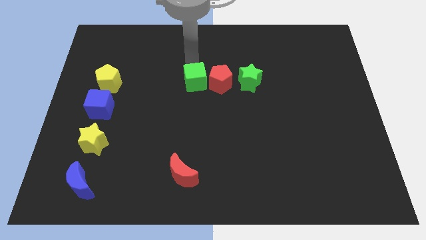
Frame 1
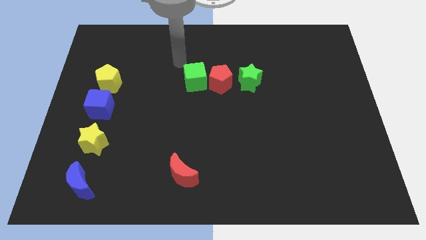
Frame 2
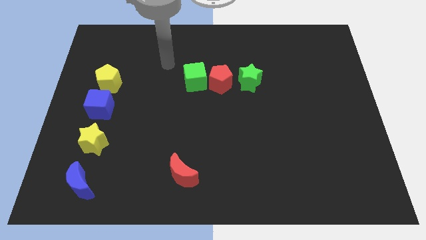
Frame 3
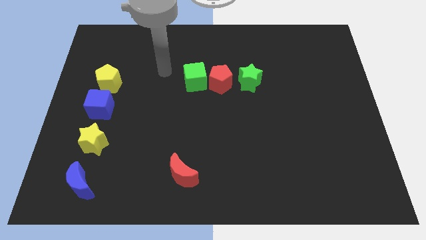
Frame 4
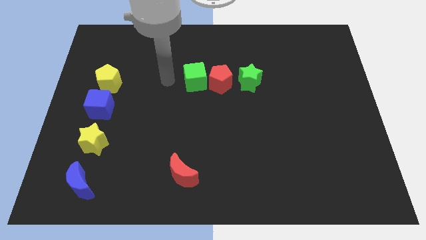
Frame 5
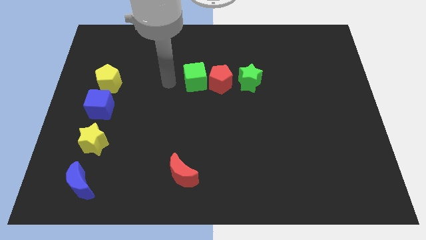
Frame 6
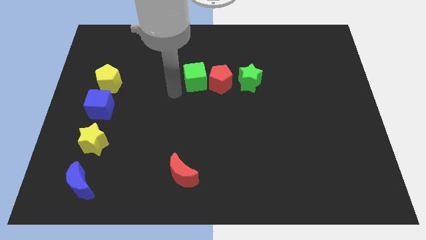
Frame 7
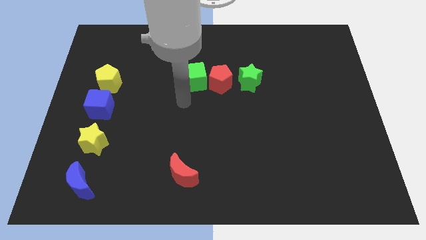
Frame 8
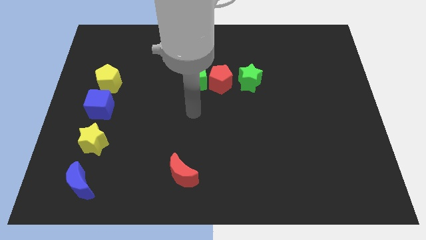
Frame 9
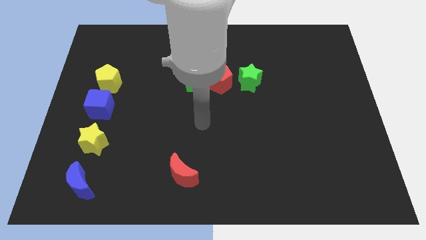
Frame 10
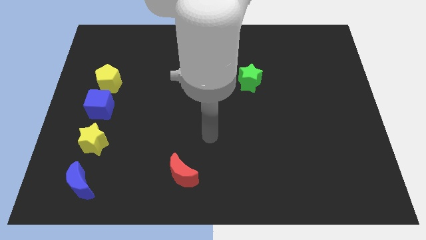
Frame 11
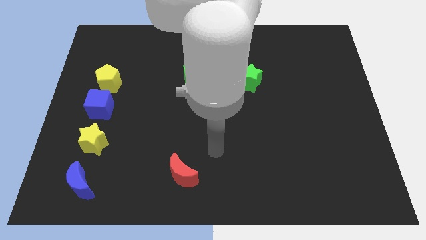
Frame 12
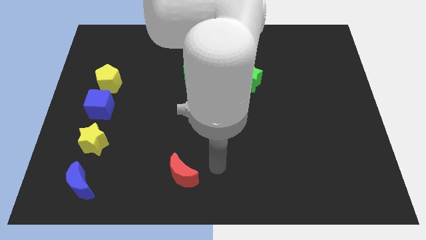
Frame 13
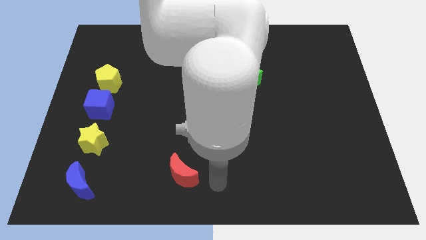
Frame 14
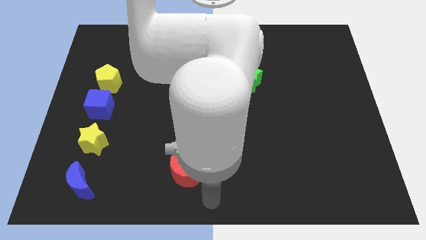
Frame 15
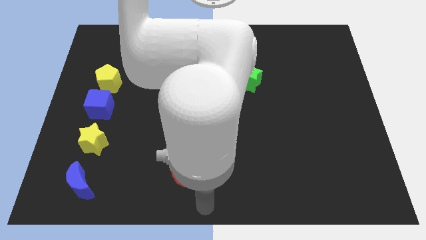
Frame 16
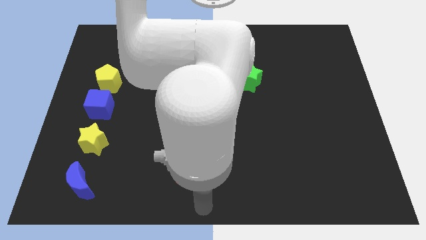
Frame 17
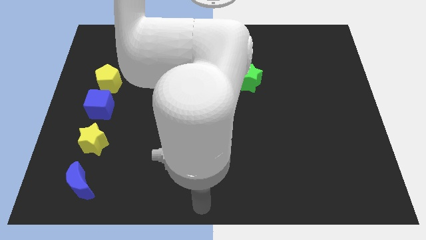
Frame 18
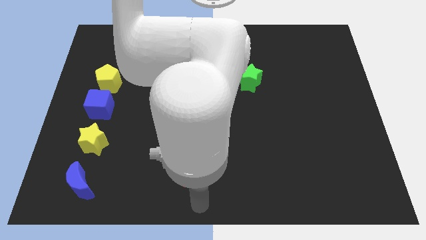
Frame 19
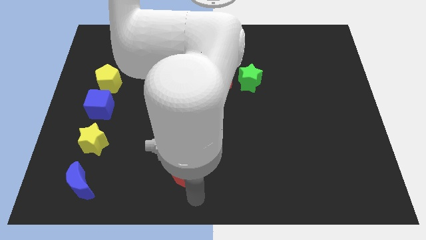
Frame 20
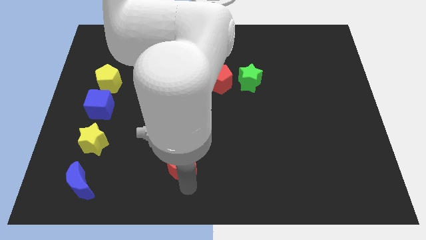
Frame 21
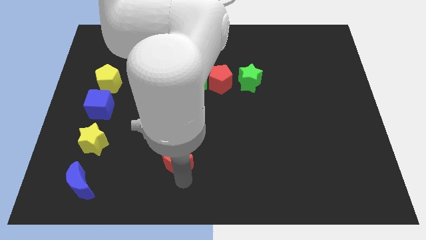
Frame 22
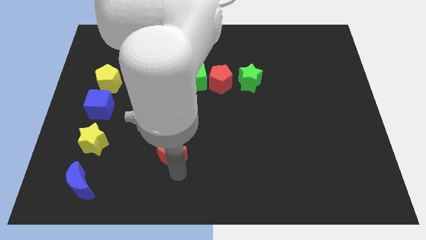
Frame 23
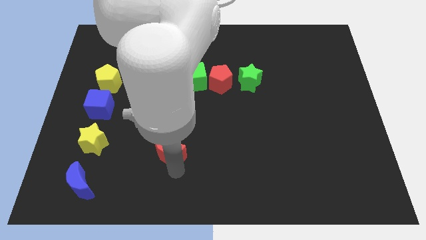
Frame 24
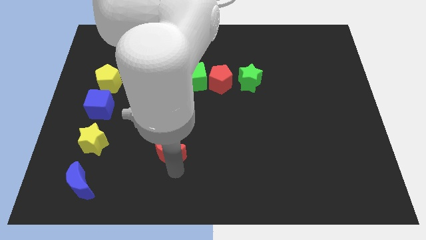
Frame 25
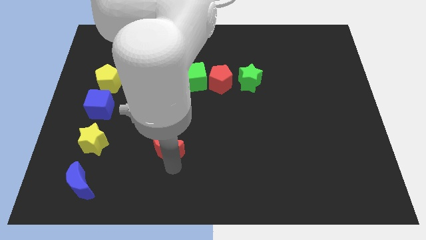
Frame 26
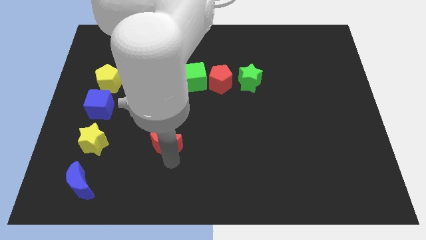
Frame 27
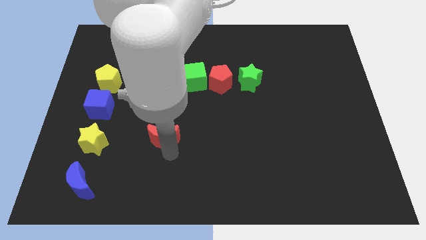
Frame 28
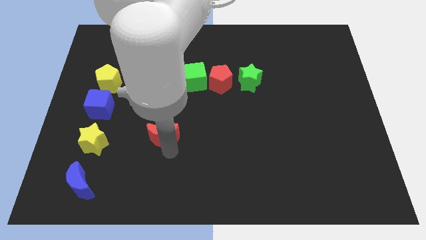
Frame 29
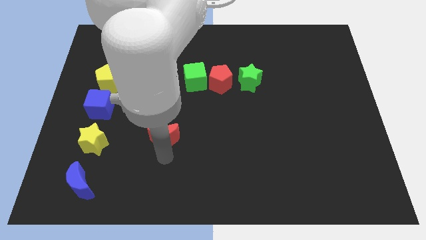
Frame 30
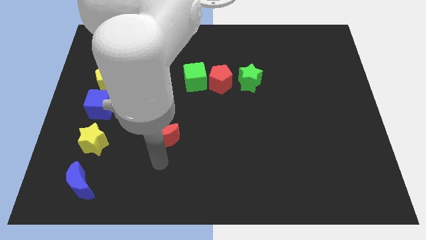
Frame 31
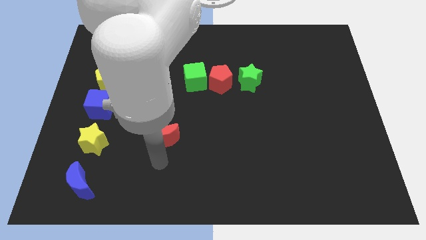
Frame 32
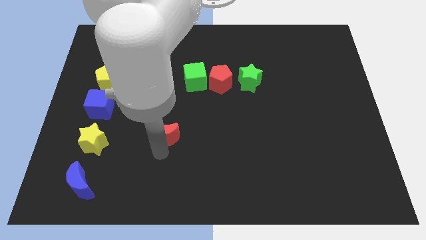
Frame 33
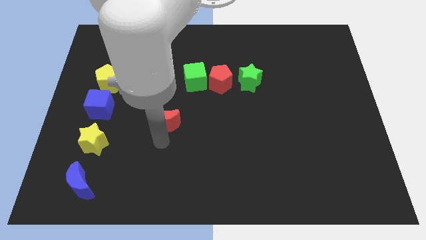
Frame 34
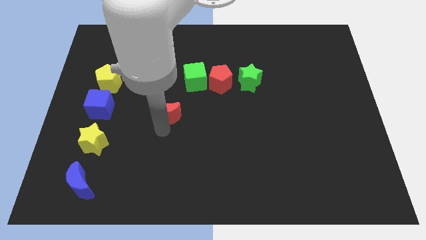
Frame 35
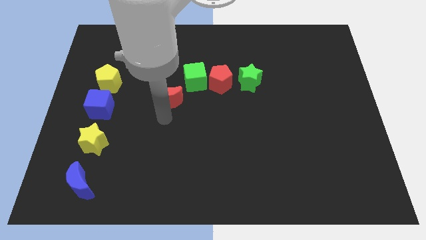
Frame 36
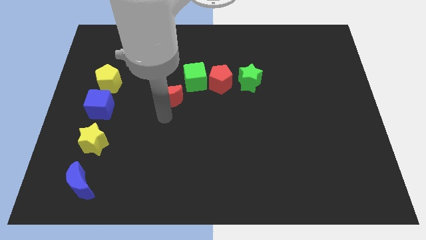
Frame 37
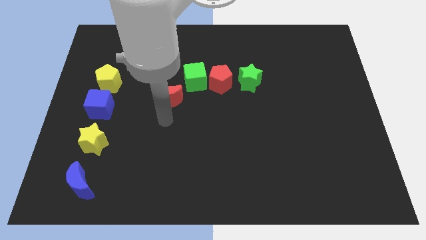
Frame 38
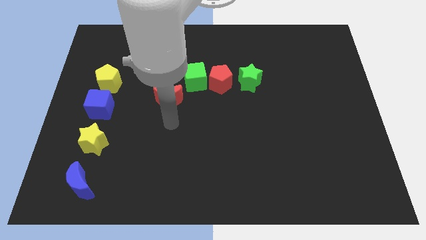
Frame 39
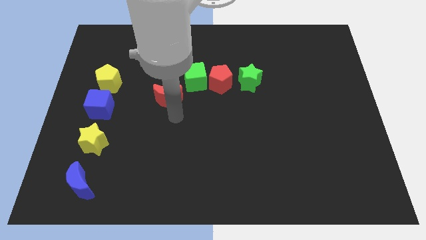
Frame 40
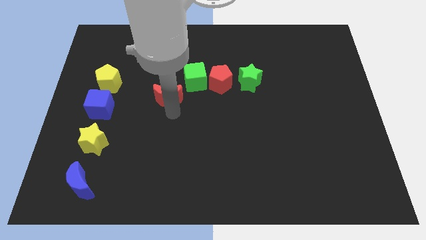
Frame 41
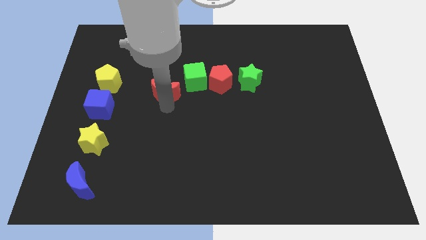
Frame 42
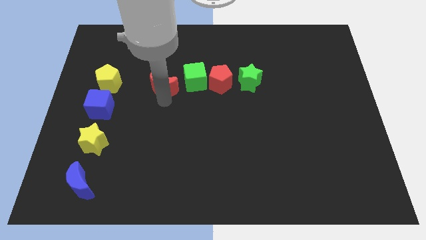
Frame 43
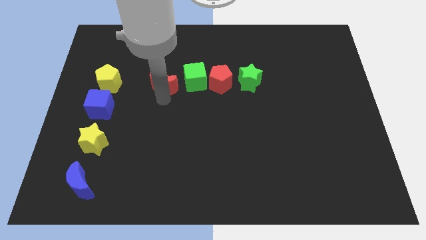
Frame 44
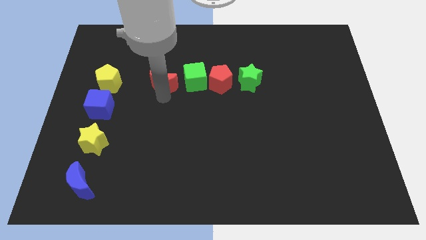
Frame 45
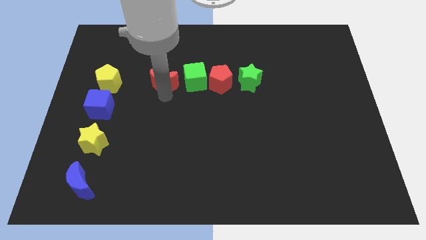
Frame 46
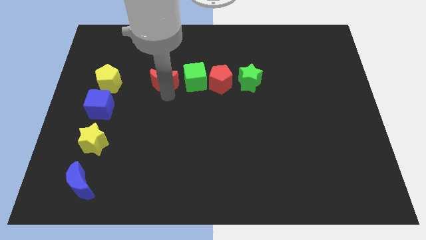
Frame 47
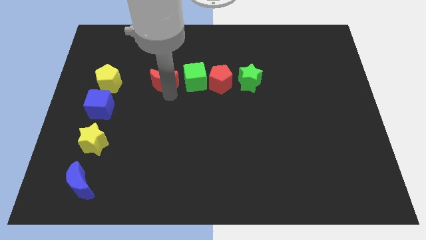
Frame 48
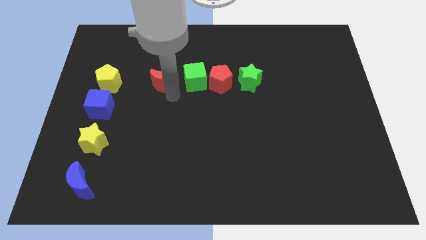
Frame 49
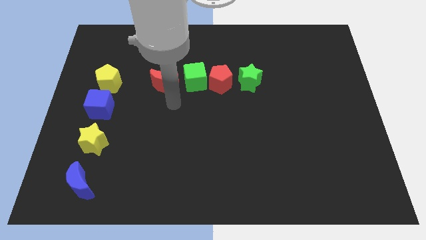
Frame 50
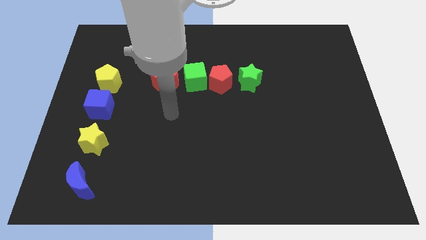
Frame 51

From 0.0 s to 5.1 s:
move the red crescent to the left side of the green cube

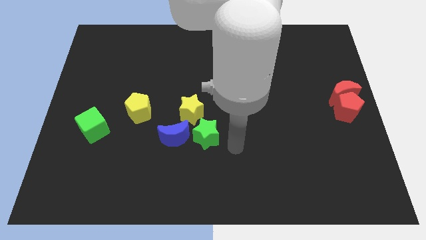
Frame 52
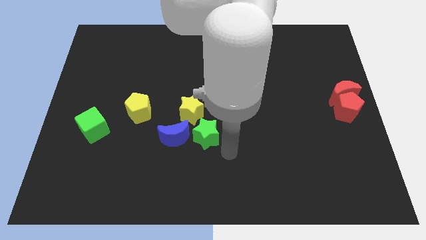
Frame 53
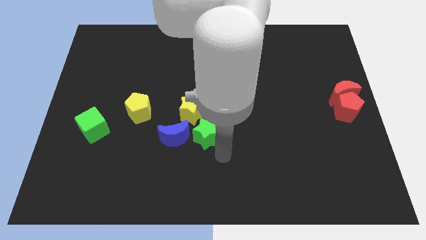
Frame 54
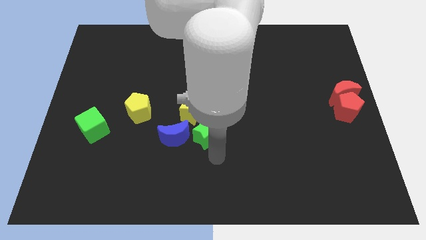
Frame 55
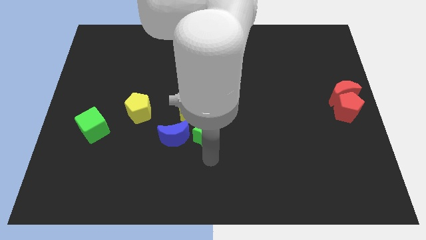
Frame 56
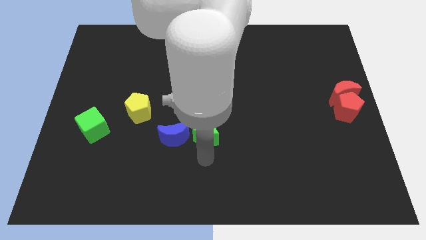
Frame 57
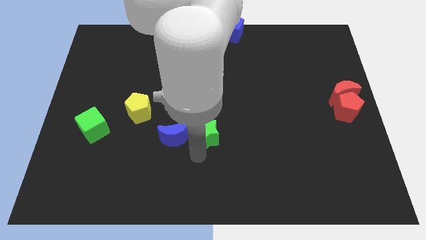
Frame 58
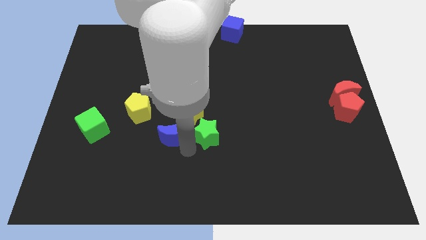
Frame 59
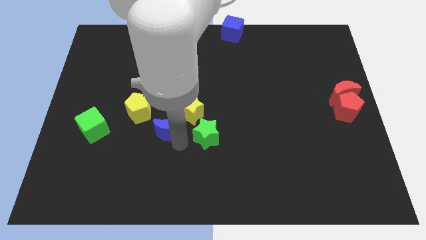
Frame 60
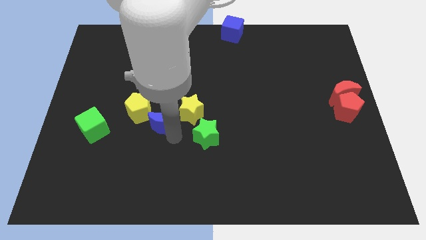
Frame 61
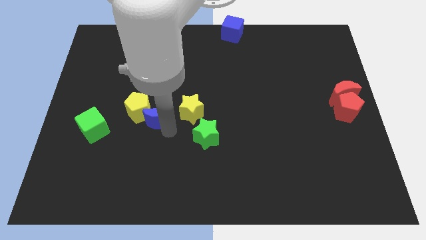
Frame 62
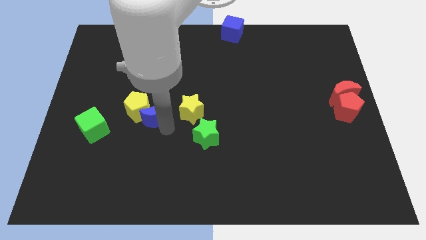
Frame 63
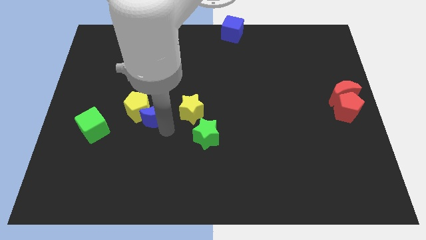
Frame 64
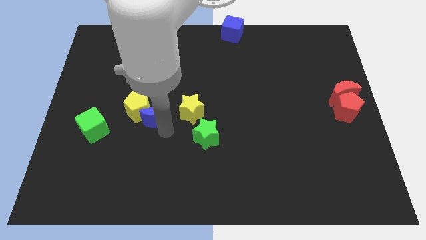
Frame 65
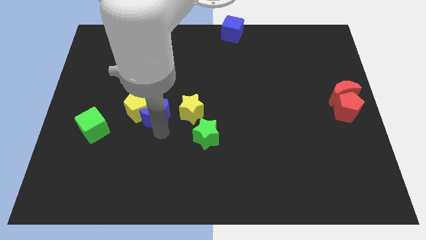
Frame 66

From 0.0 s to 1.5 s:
move blue moon into the yellow pentagon

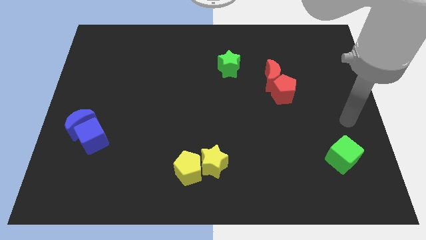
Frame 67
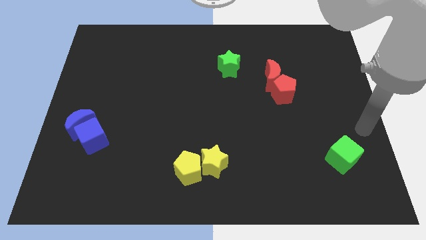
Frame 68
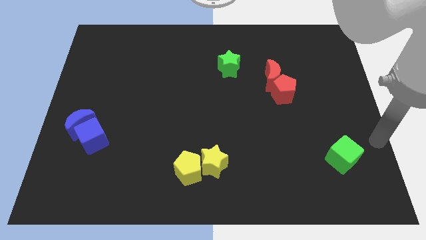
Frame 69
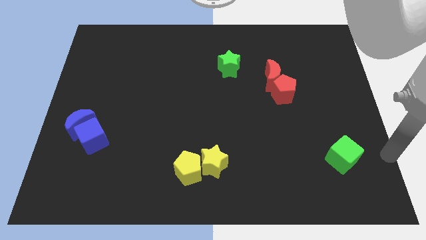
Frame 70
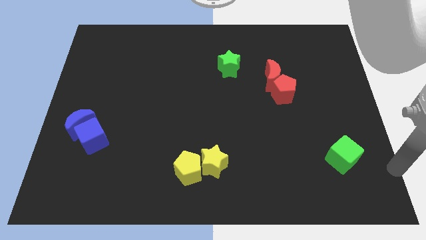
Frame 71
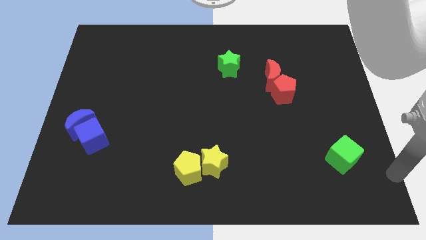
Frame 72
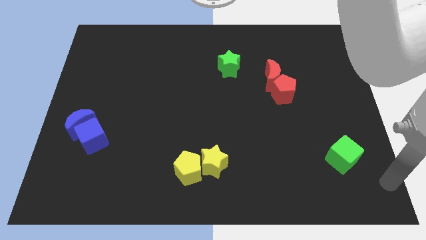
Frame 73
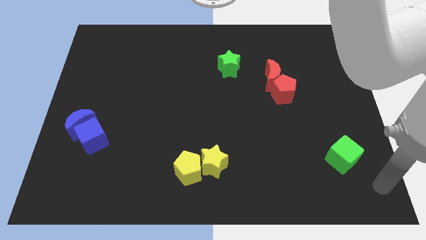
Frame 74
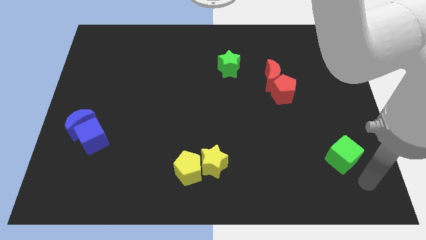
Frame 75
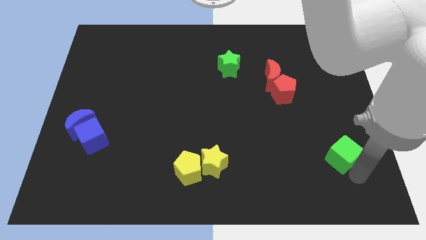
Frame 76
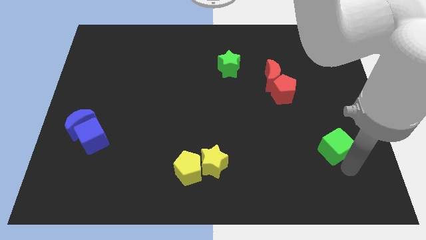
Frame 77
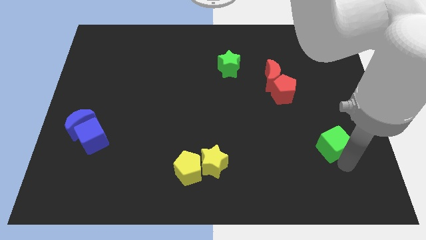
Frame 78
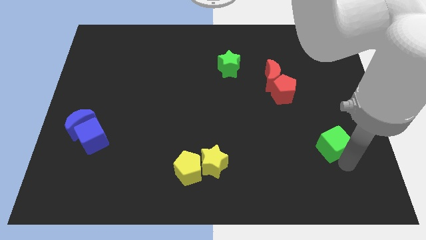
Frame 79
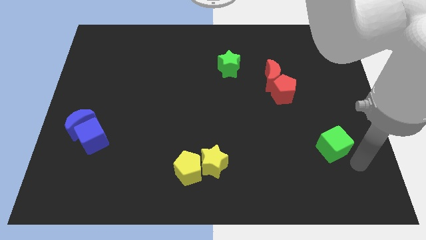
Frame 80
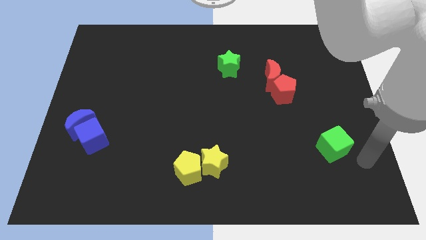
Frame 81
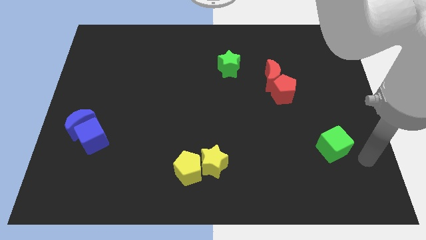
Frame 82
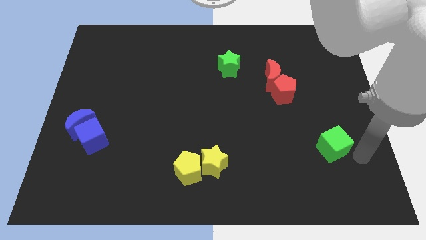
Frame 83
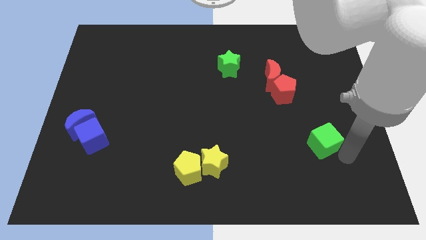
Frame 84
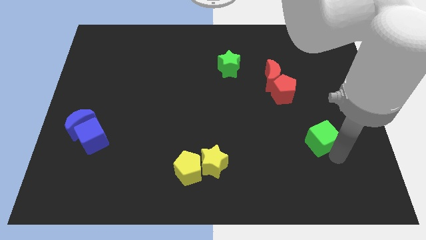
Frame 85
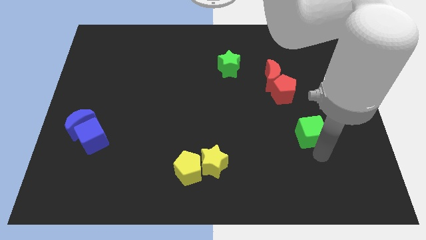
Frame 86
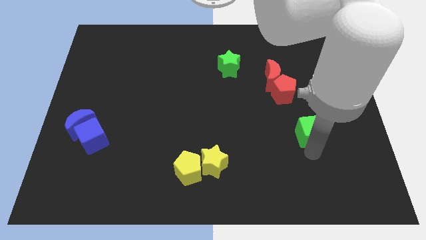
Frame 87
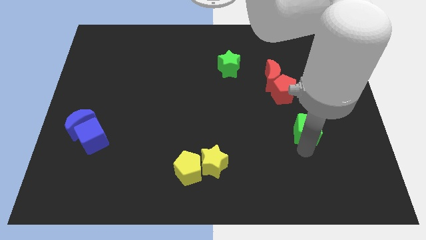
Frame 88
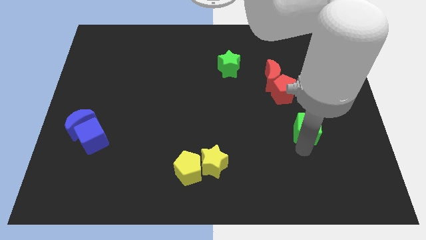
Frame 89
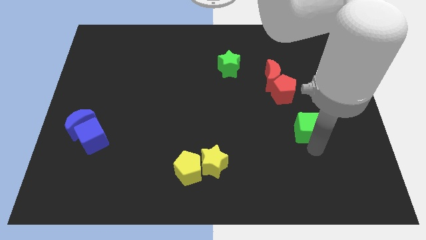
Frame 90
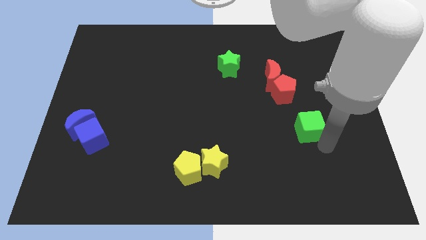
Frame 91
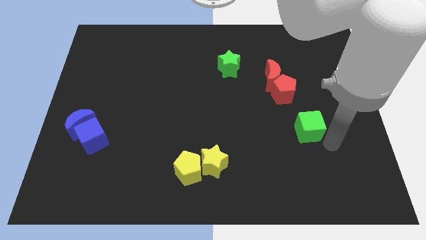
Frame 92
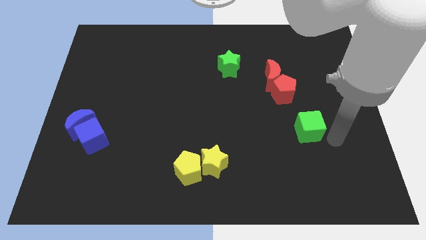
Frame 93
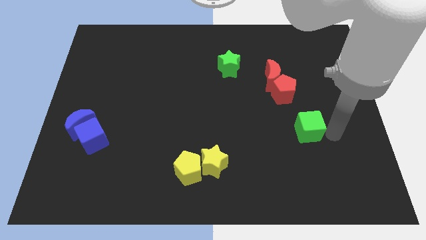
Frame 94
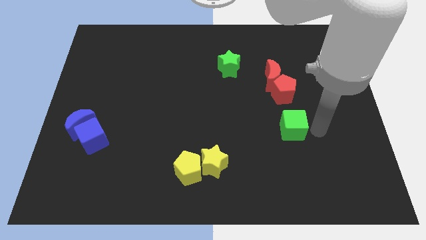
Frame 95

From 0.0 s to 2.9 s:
place the green cube below the red pentagon
